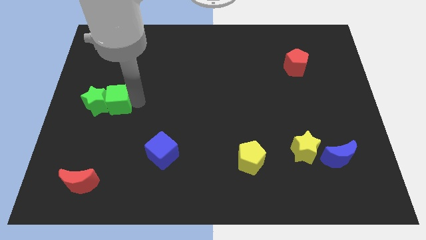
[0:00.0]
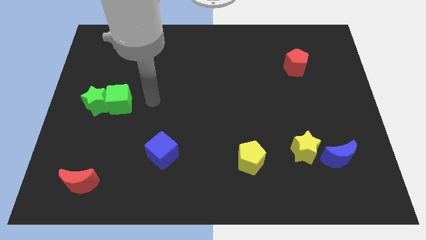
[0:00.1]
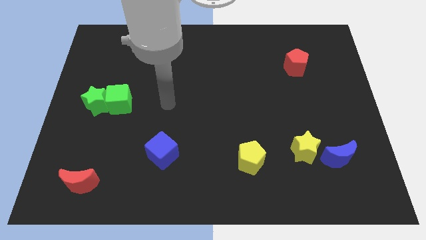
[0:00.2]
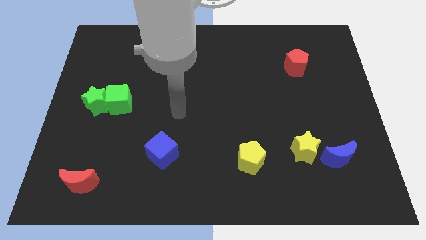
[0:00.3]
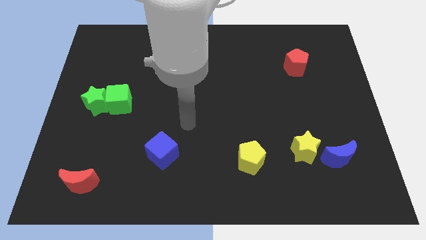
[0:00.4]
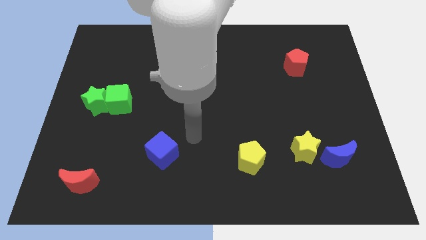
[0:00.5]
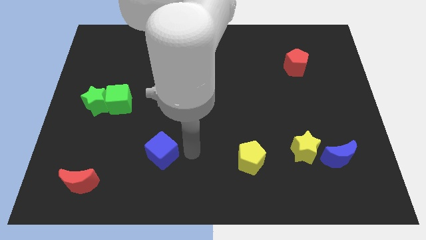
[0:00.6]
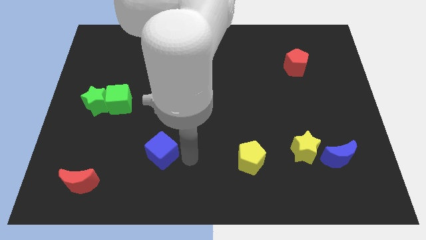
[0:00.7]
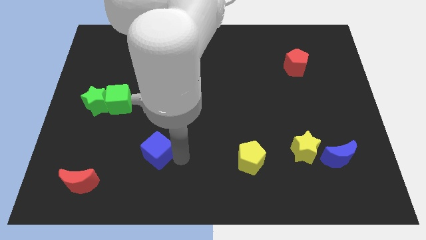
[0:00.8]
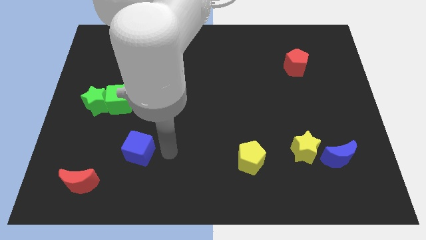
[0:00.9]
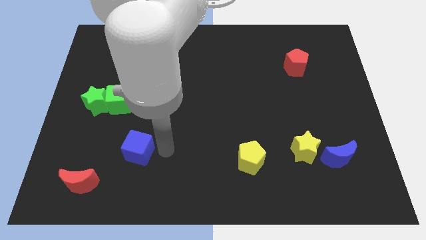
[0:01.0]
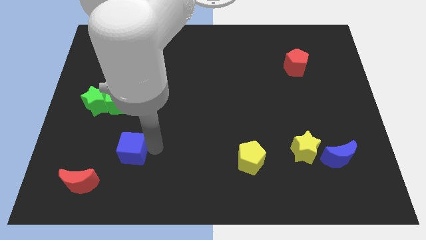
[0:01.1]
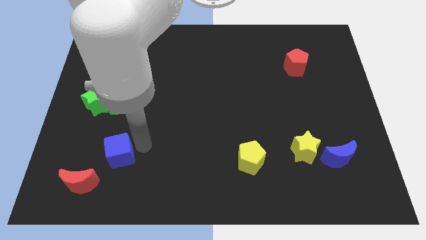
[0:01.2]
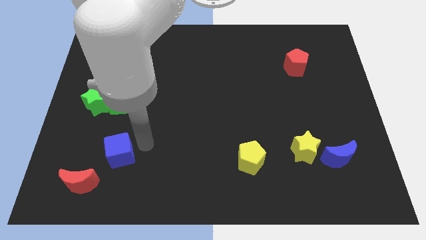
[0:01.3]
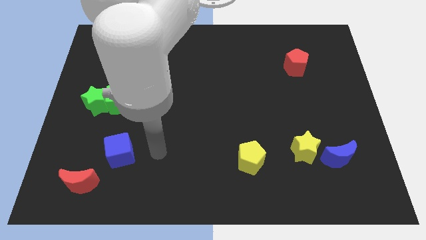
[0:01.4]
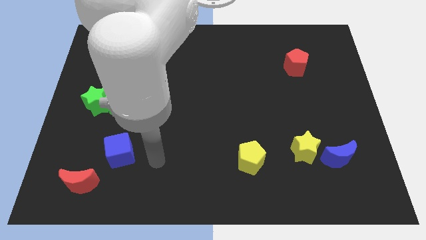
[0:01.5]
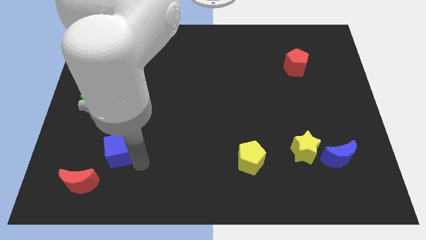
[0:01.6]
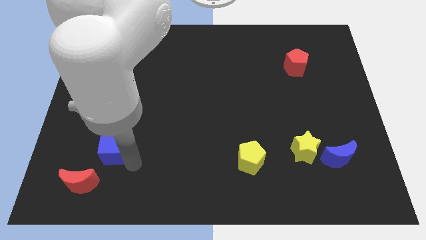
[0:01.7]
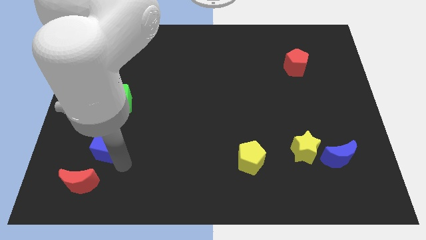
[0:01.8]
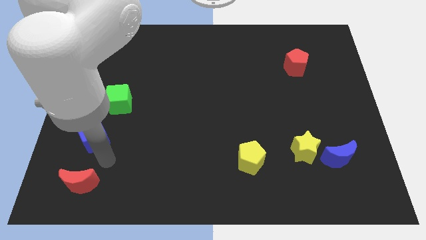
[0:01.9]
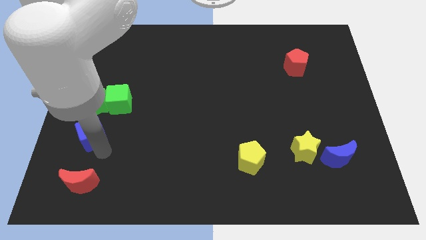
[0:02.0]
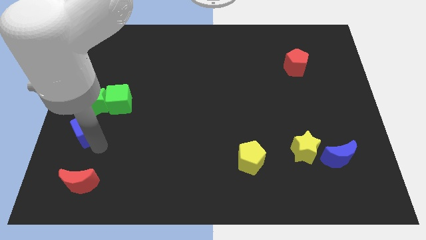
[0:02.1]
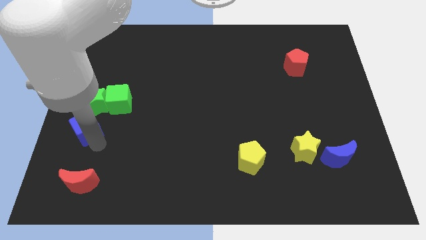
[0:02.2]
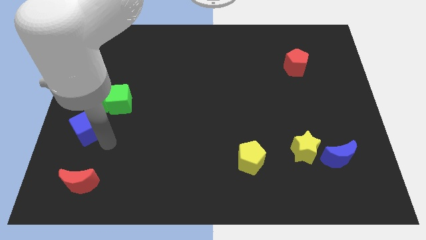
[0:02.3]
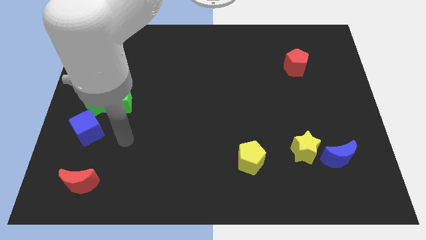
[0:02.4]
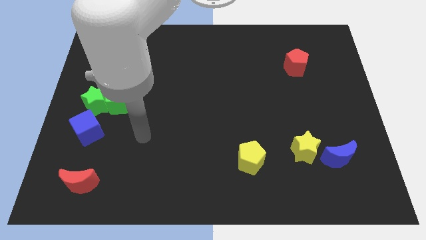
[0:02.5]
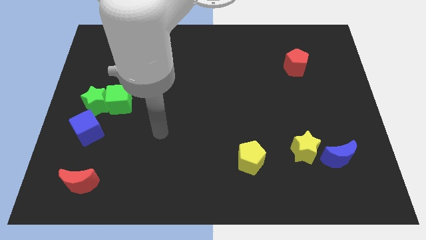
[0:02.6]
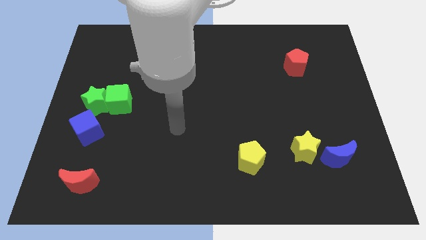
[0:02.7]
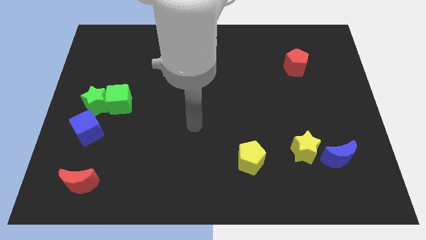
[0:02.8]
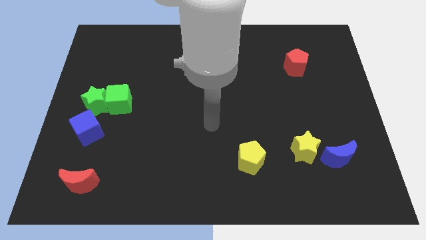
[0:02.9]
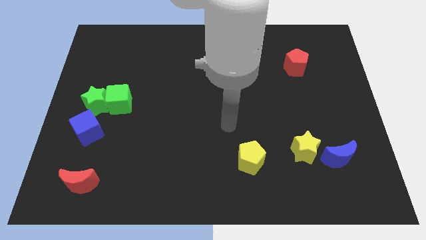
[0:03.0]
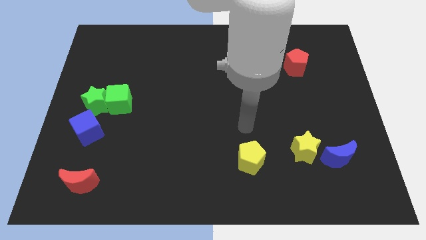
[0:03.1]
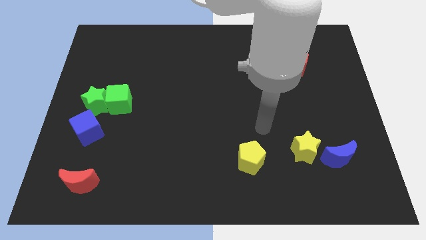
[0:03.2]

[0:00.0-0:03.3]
move the blue cube at the bottom side of the green star

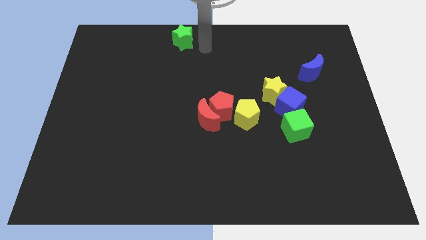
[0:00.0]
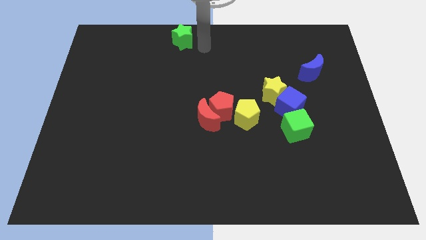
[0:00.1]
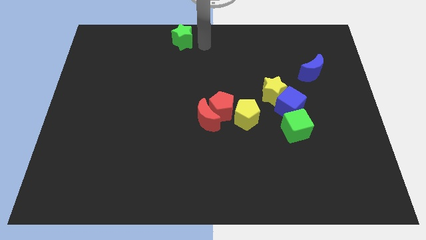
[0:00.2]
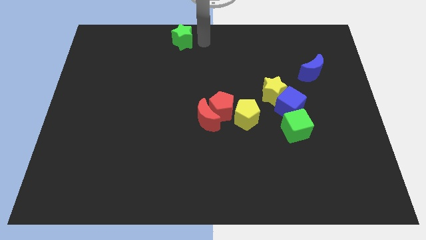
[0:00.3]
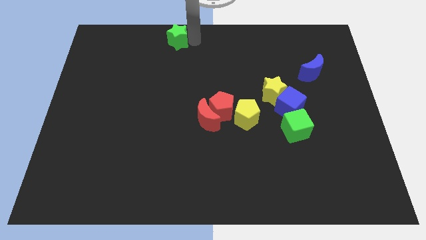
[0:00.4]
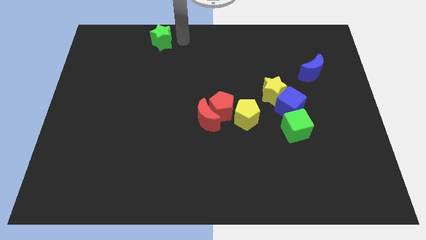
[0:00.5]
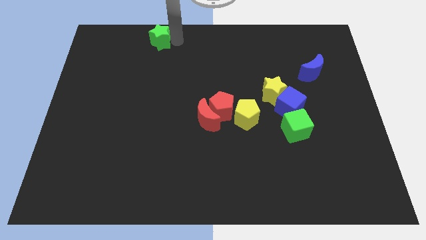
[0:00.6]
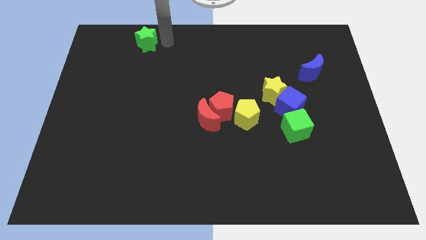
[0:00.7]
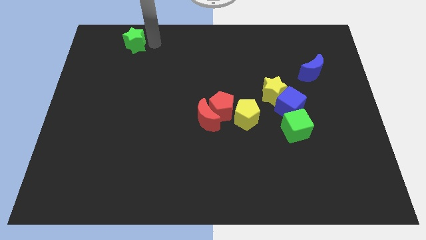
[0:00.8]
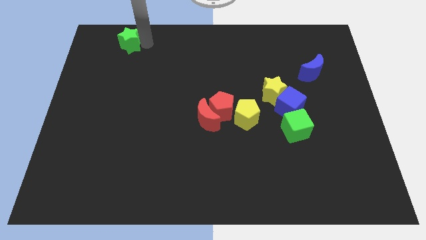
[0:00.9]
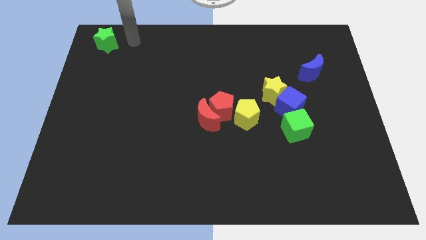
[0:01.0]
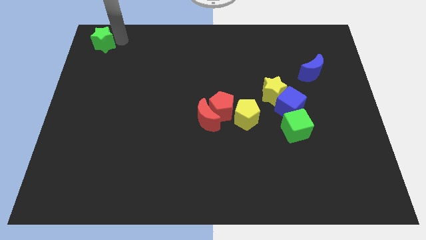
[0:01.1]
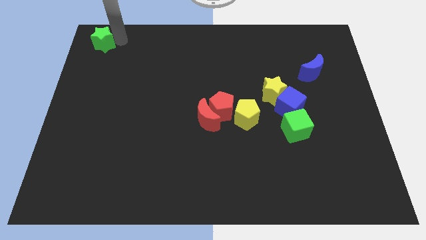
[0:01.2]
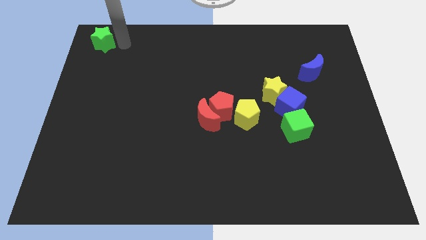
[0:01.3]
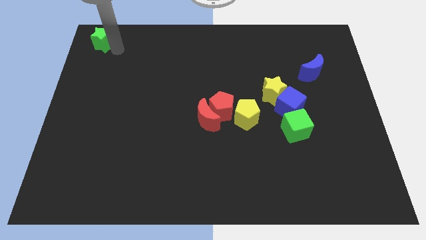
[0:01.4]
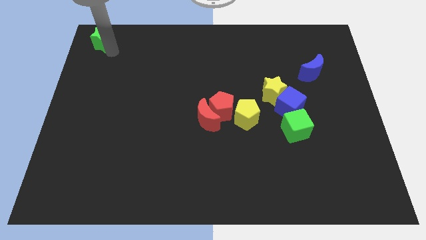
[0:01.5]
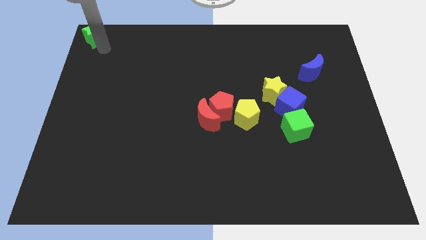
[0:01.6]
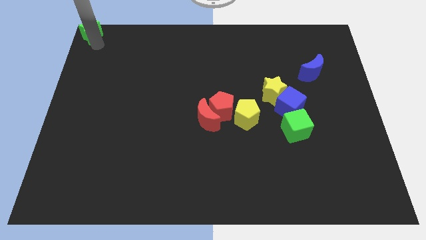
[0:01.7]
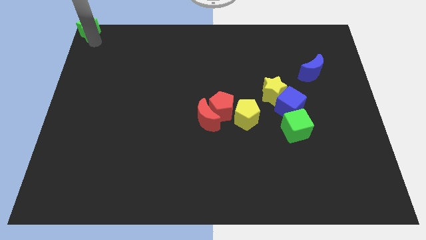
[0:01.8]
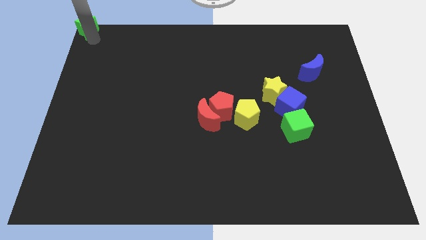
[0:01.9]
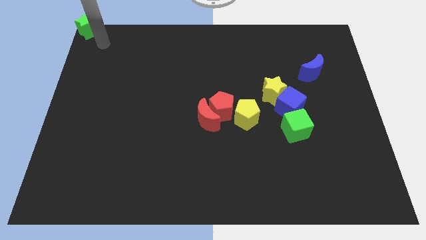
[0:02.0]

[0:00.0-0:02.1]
move the green star to the top left of the board

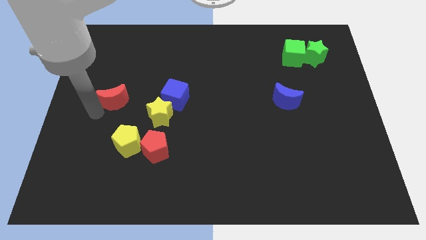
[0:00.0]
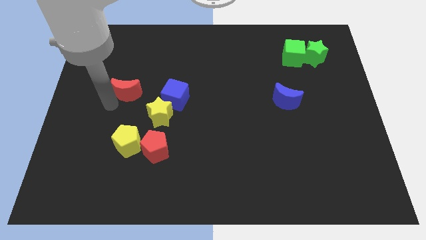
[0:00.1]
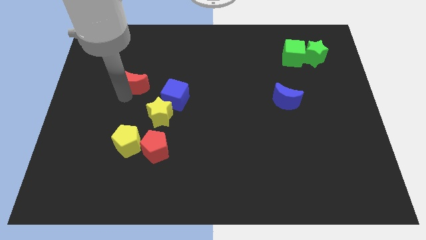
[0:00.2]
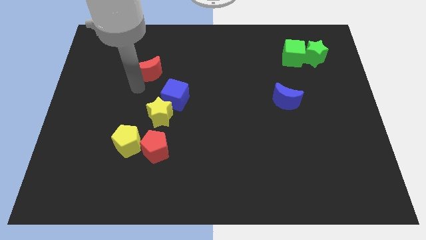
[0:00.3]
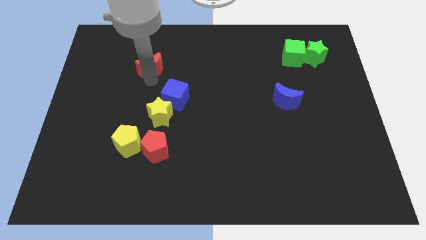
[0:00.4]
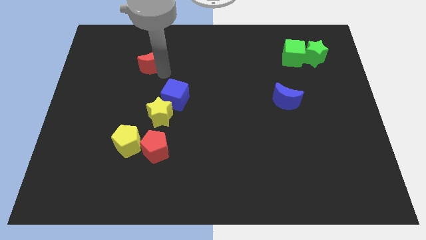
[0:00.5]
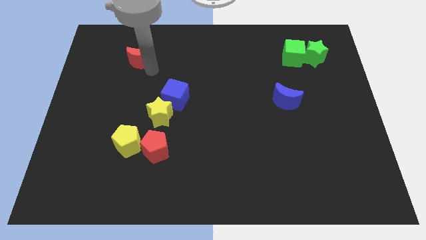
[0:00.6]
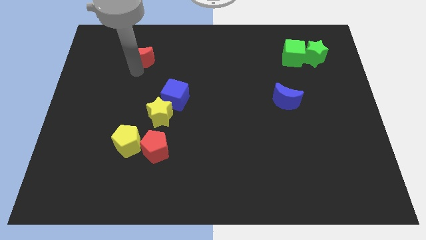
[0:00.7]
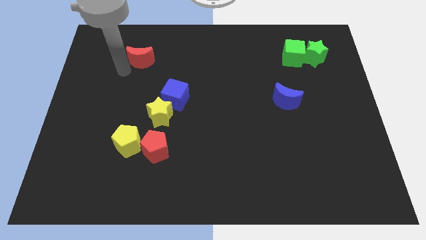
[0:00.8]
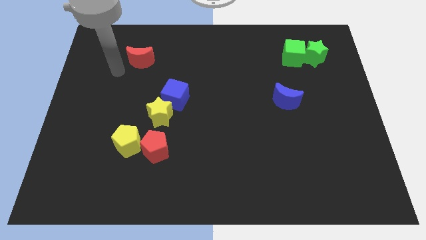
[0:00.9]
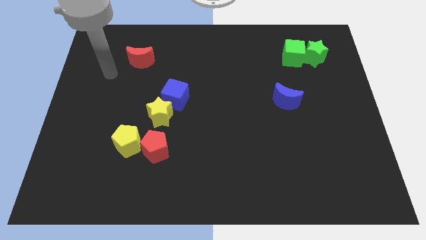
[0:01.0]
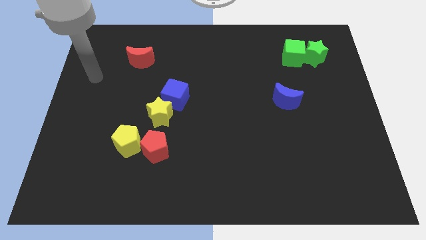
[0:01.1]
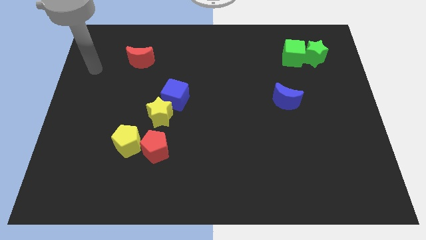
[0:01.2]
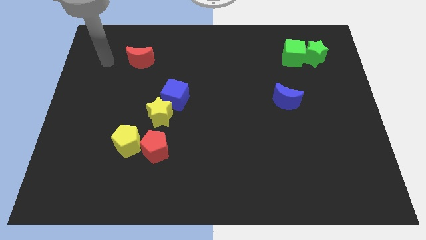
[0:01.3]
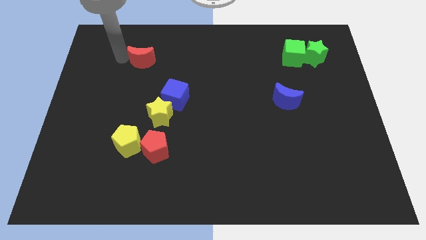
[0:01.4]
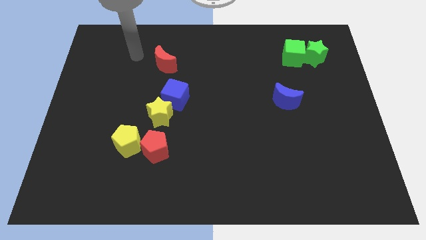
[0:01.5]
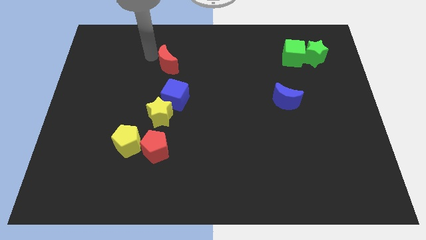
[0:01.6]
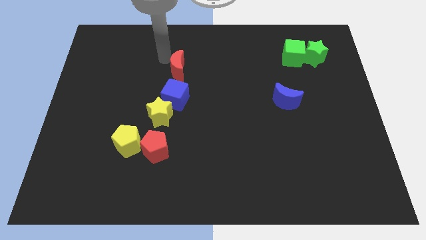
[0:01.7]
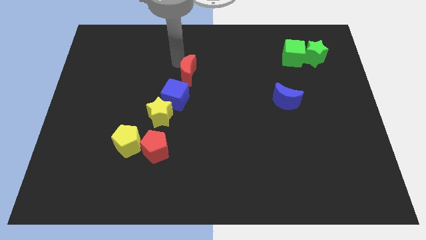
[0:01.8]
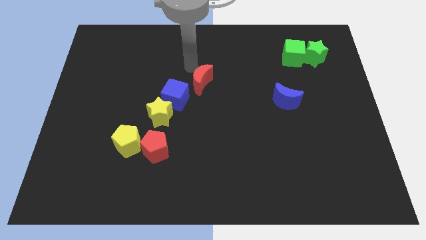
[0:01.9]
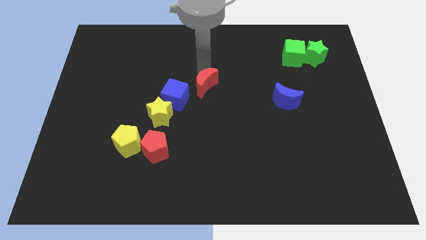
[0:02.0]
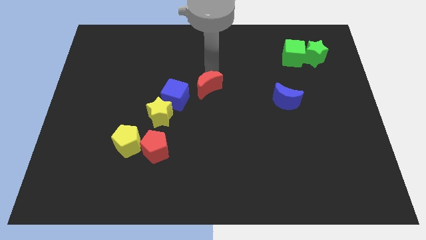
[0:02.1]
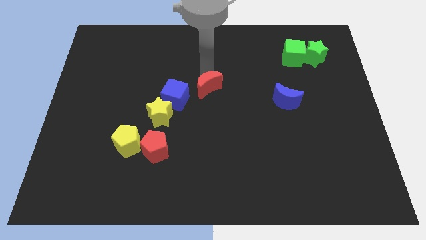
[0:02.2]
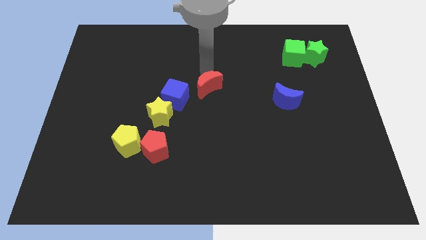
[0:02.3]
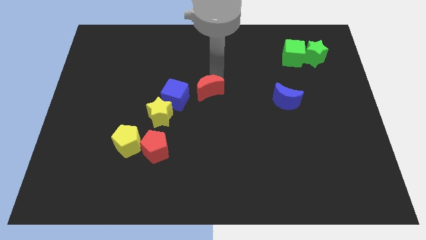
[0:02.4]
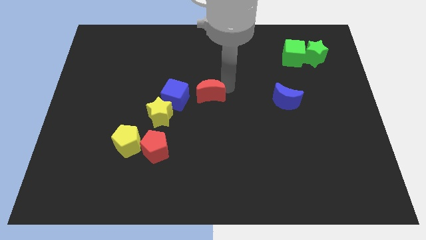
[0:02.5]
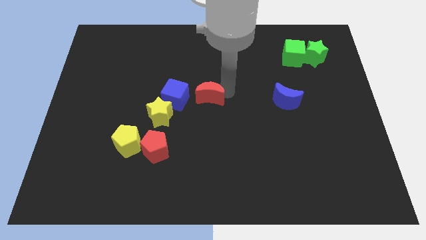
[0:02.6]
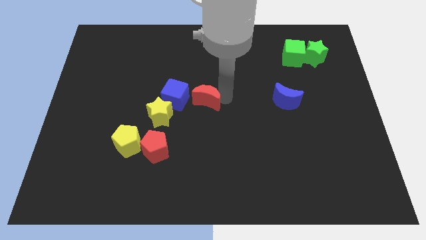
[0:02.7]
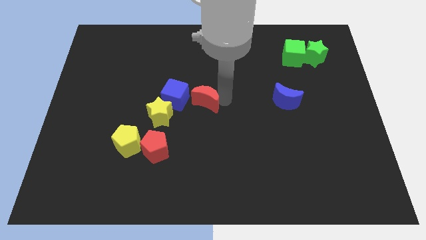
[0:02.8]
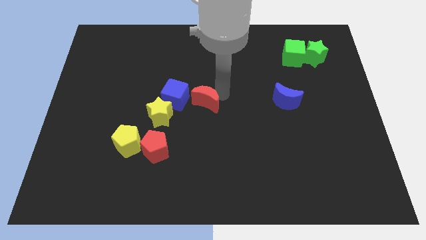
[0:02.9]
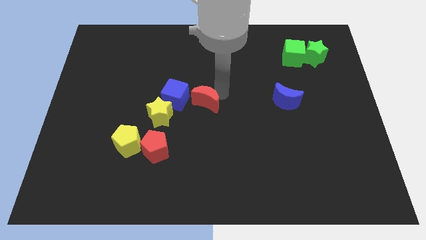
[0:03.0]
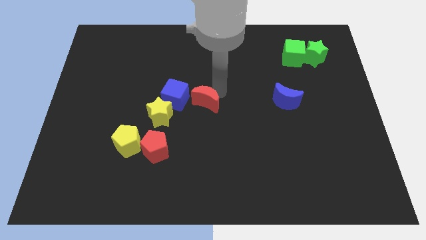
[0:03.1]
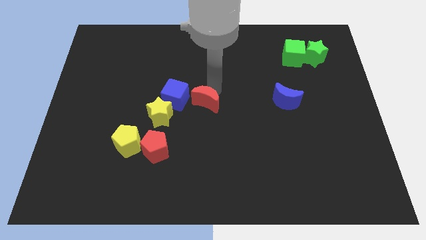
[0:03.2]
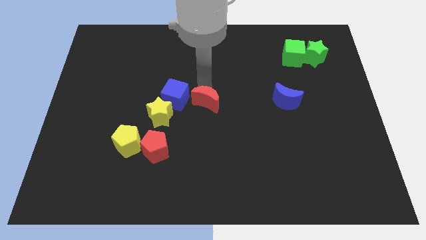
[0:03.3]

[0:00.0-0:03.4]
move the red crescent to the right of the blue cube

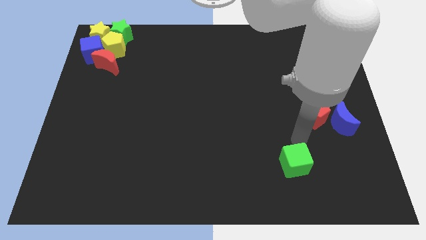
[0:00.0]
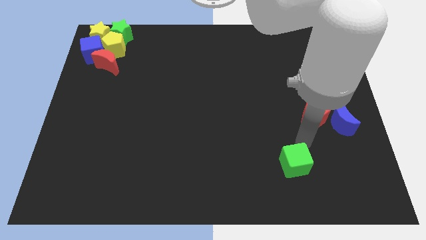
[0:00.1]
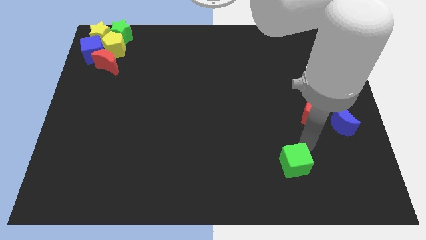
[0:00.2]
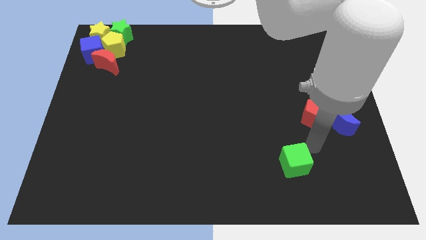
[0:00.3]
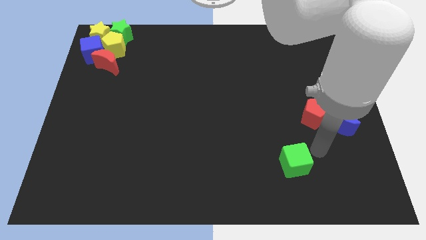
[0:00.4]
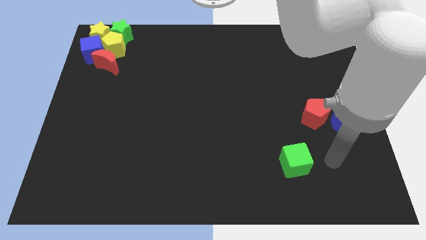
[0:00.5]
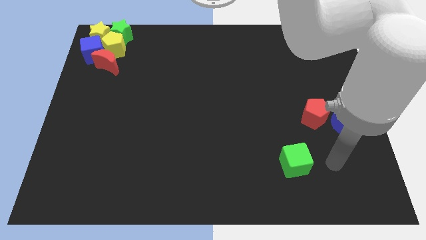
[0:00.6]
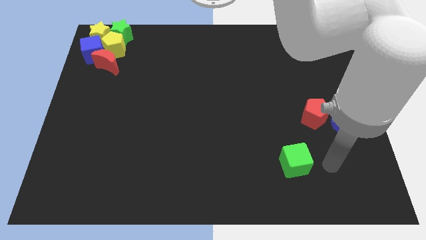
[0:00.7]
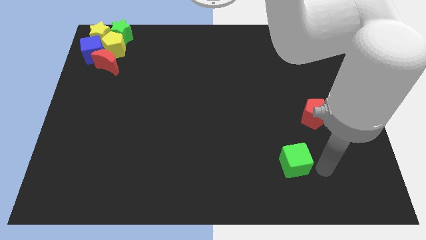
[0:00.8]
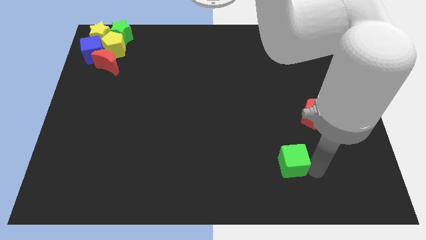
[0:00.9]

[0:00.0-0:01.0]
touch the right side of the green cube
